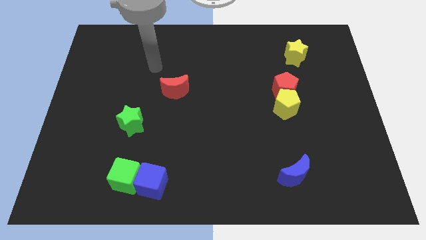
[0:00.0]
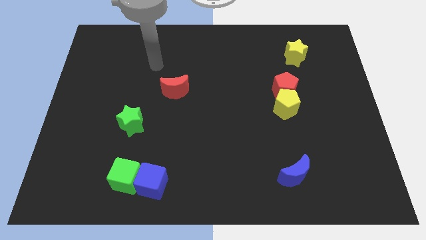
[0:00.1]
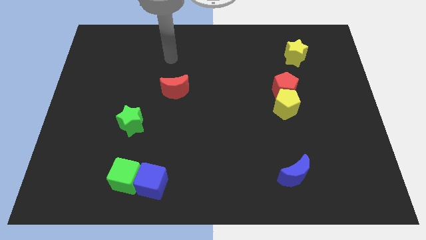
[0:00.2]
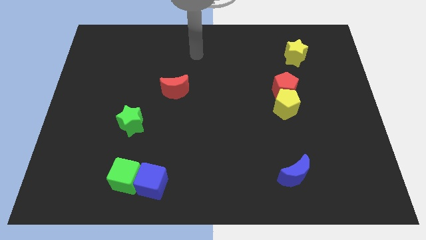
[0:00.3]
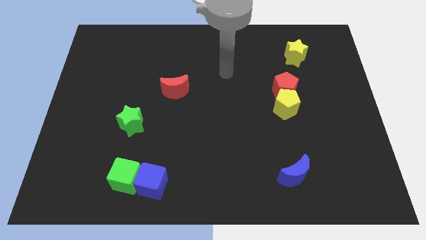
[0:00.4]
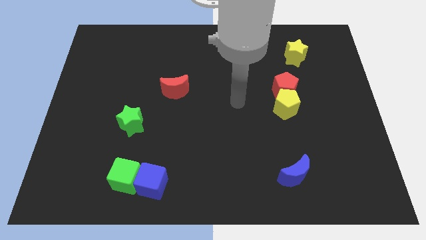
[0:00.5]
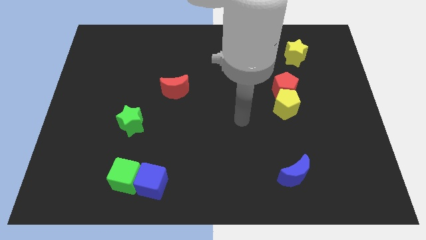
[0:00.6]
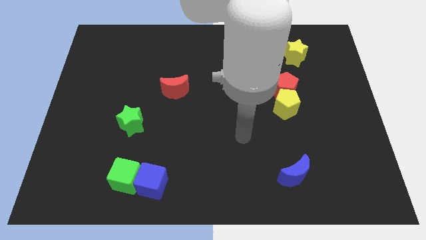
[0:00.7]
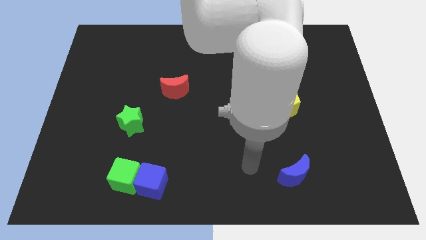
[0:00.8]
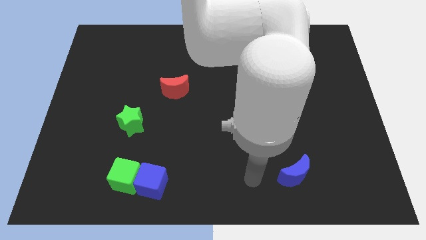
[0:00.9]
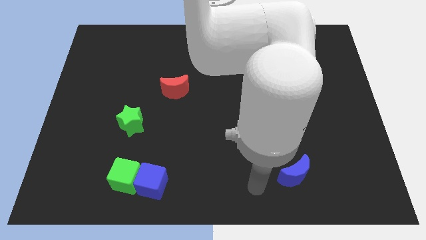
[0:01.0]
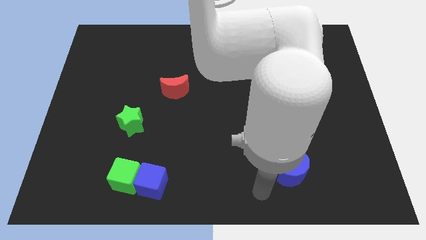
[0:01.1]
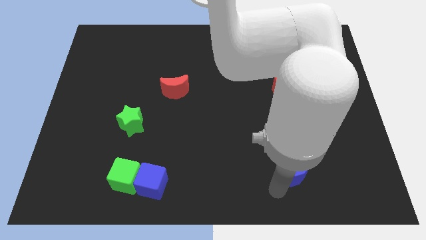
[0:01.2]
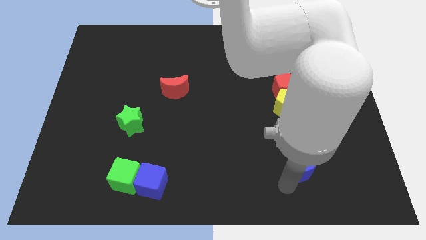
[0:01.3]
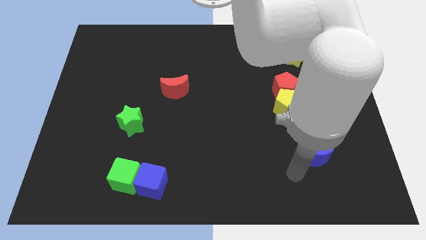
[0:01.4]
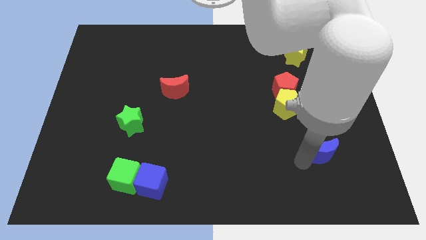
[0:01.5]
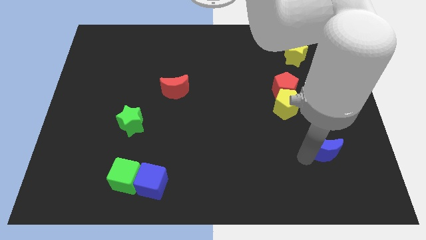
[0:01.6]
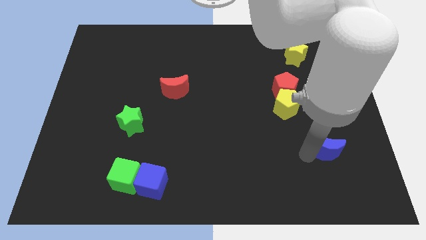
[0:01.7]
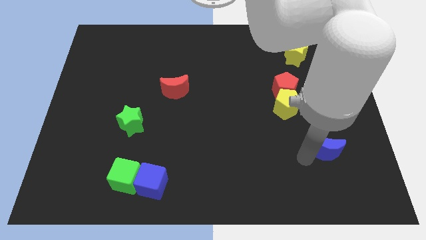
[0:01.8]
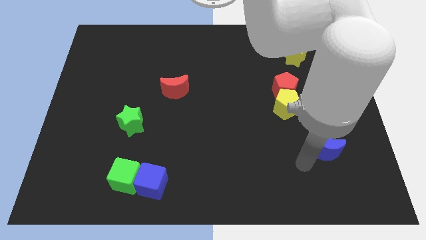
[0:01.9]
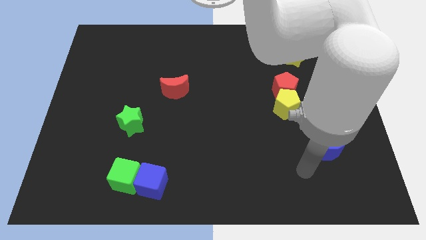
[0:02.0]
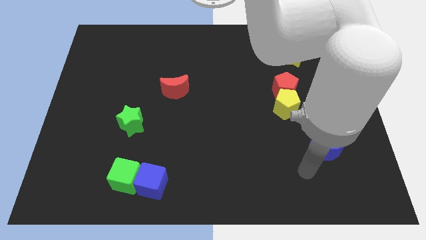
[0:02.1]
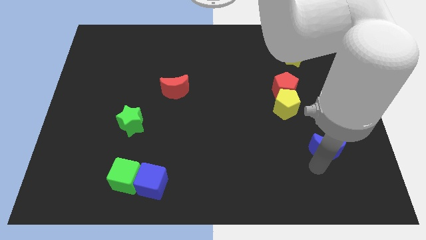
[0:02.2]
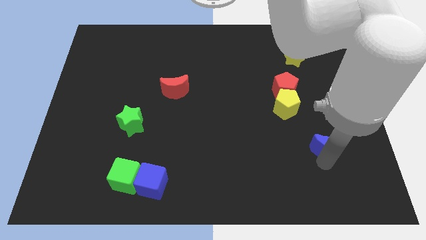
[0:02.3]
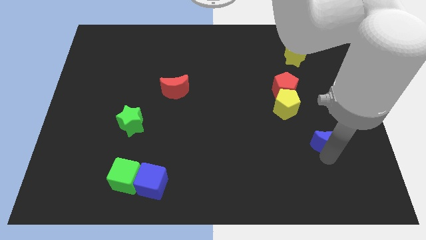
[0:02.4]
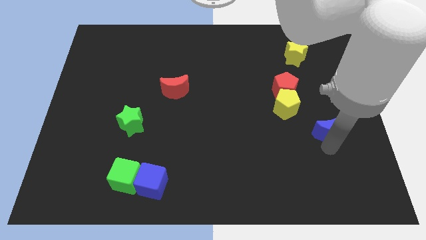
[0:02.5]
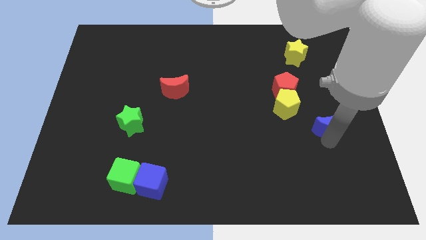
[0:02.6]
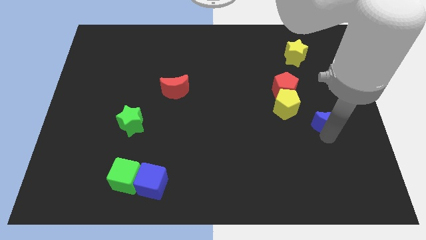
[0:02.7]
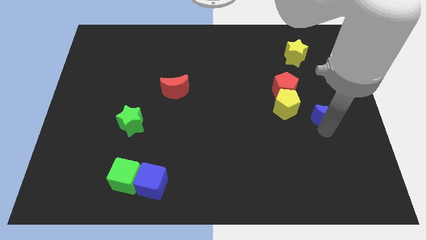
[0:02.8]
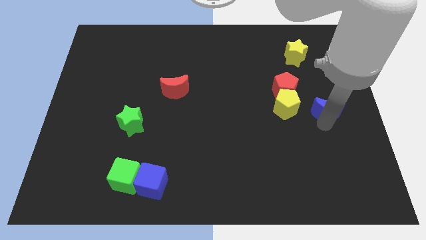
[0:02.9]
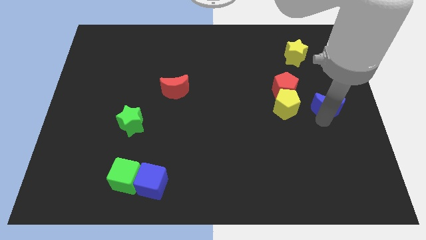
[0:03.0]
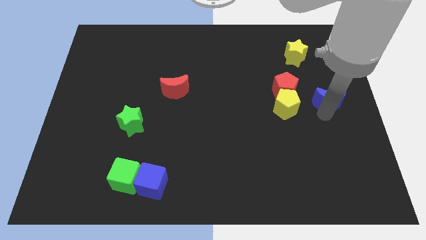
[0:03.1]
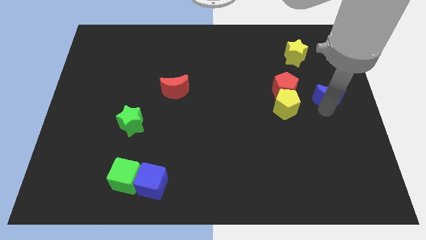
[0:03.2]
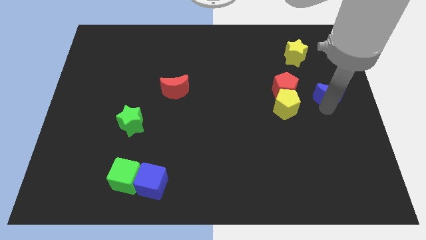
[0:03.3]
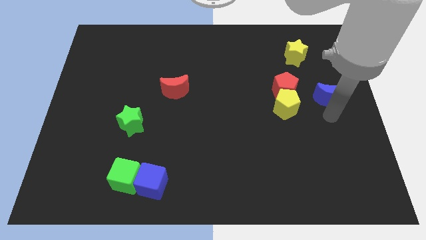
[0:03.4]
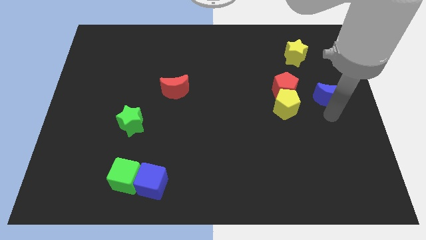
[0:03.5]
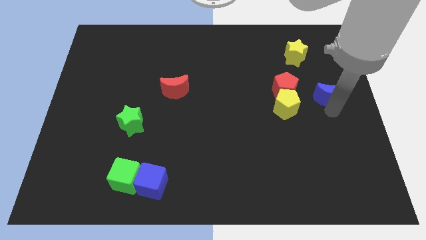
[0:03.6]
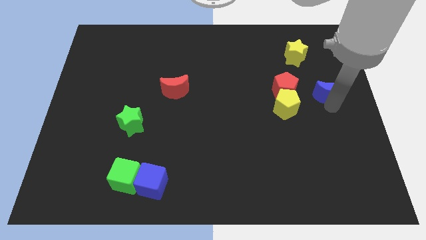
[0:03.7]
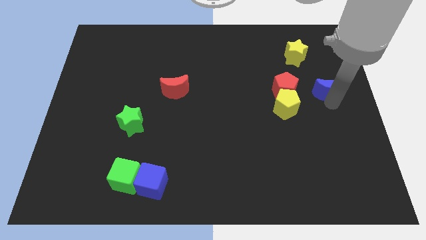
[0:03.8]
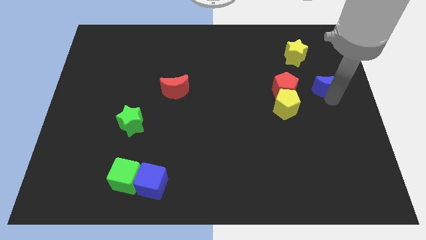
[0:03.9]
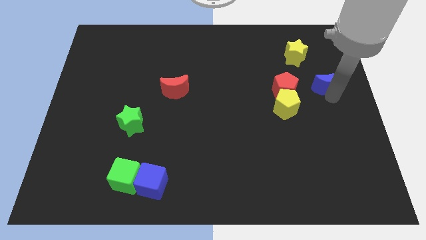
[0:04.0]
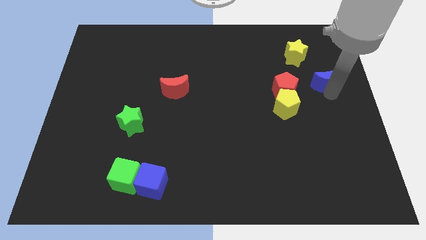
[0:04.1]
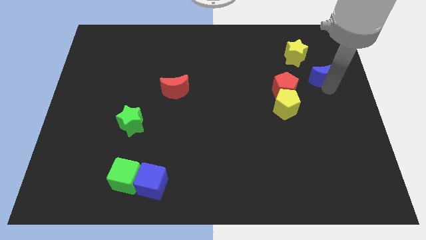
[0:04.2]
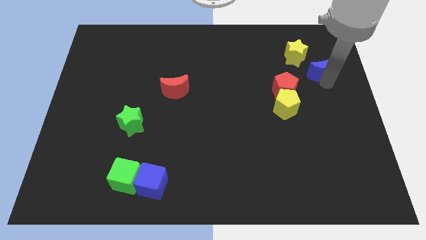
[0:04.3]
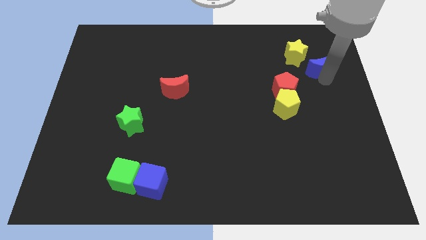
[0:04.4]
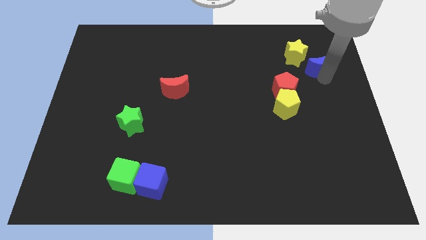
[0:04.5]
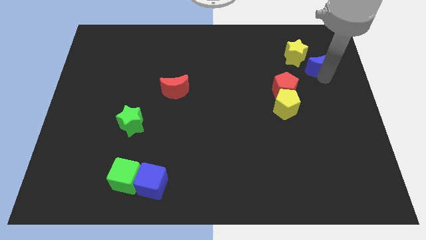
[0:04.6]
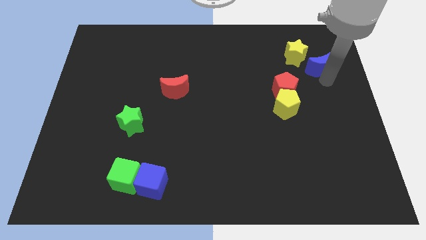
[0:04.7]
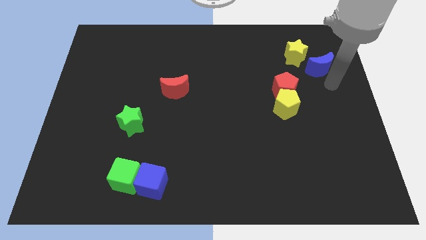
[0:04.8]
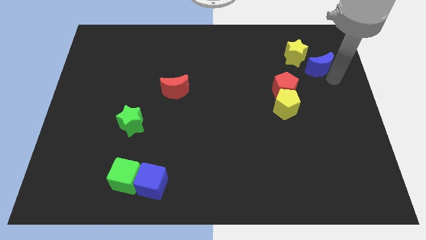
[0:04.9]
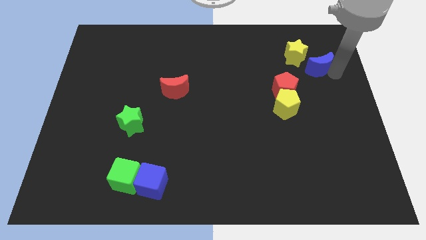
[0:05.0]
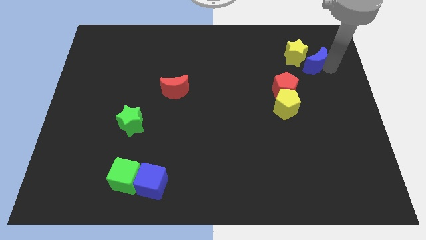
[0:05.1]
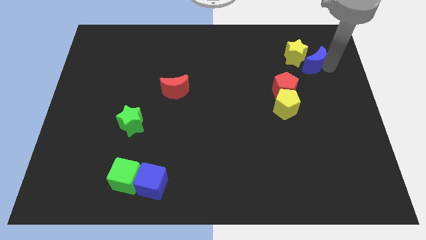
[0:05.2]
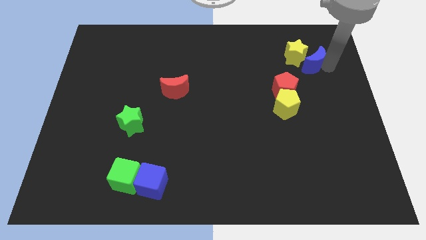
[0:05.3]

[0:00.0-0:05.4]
slide the blue moon next to the yellow star

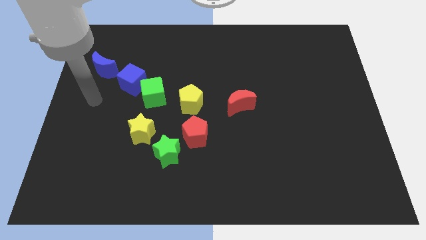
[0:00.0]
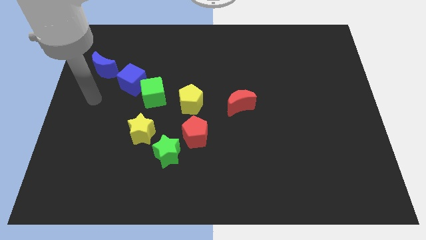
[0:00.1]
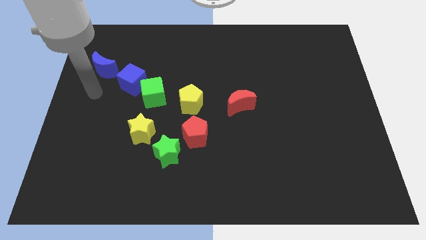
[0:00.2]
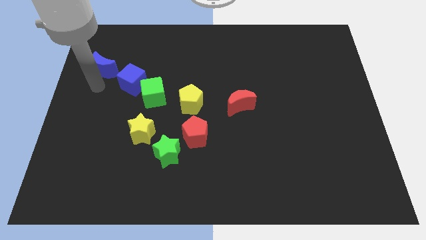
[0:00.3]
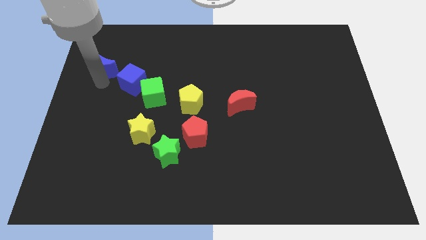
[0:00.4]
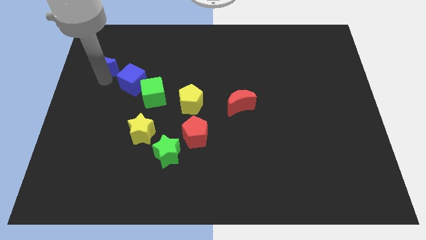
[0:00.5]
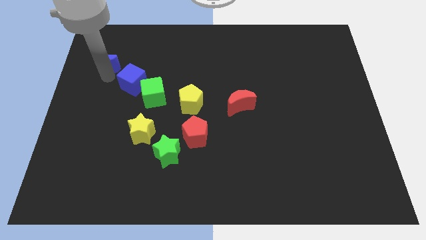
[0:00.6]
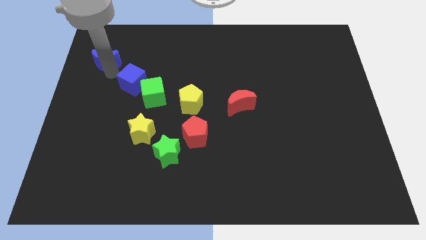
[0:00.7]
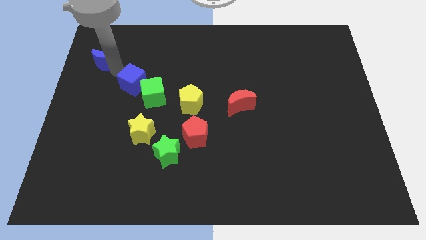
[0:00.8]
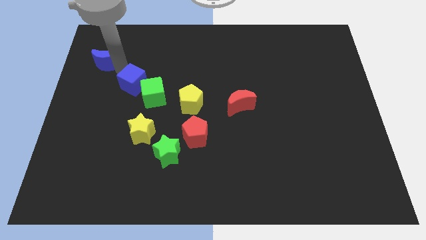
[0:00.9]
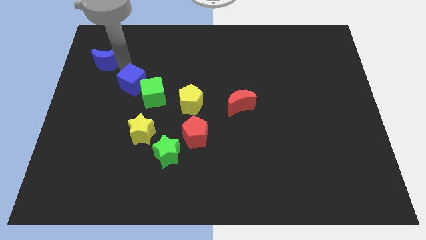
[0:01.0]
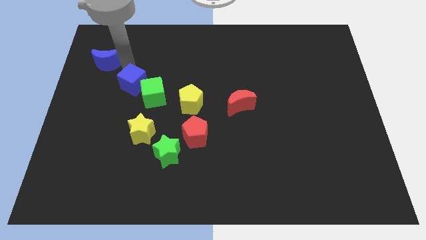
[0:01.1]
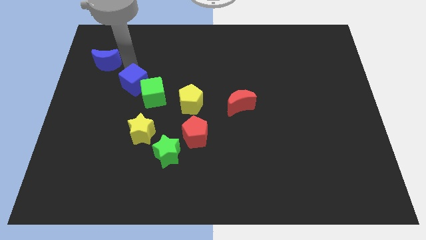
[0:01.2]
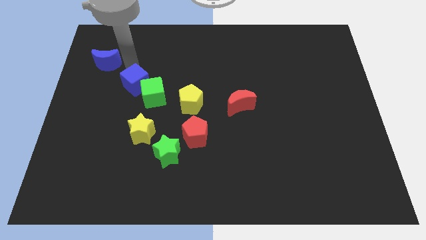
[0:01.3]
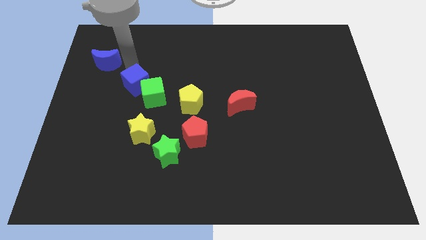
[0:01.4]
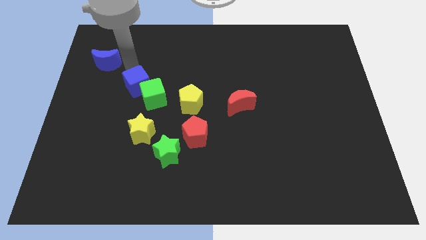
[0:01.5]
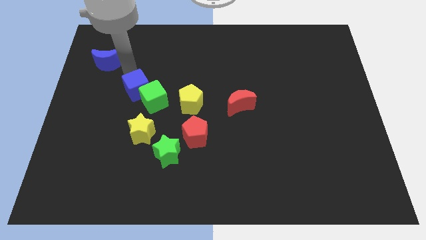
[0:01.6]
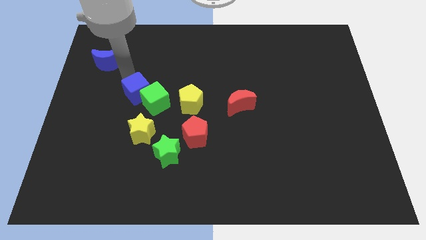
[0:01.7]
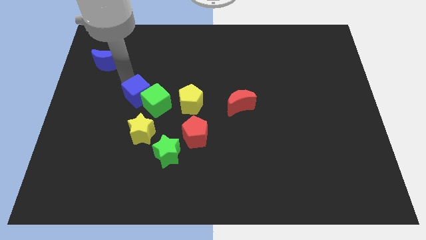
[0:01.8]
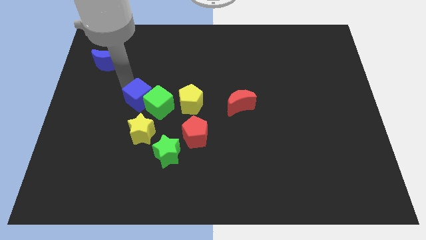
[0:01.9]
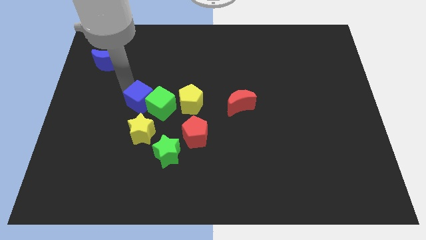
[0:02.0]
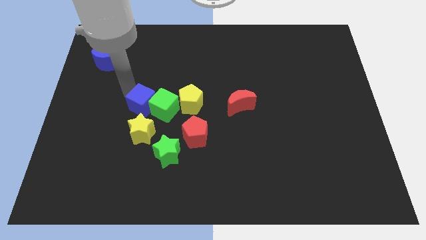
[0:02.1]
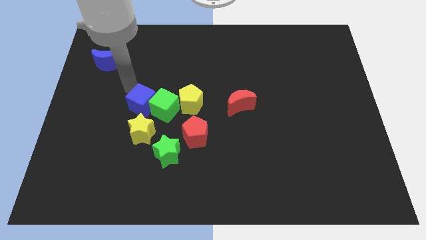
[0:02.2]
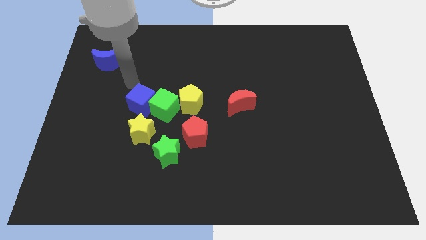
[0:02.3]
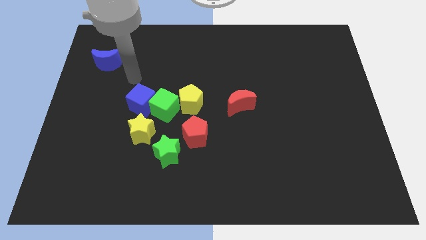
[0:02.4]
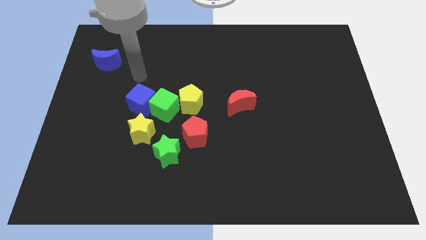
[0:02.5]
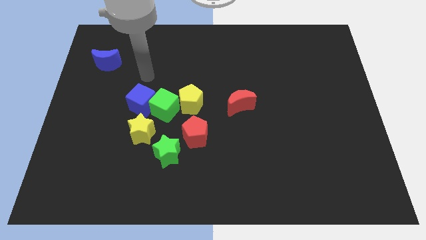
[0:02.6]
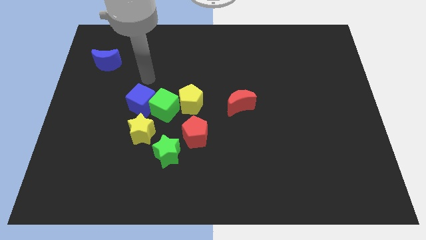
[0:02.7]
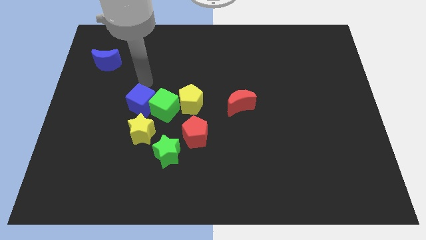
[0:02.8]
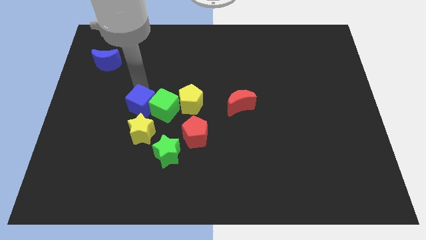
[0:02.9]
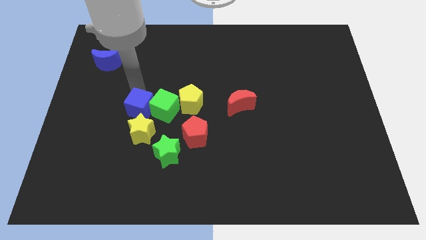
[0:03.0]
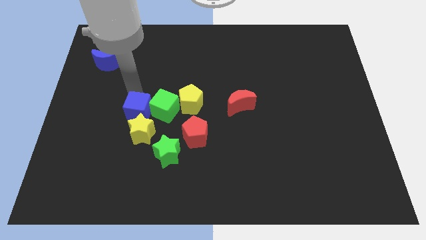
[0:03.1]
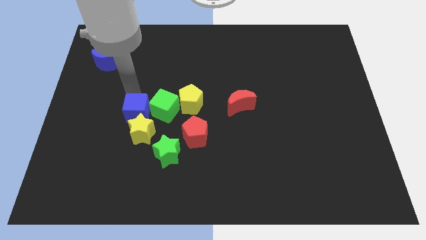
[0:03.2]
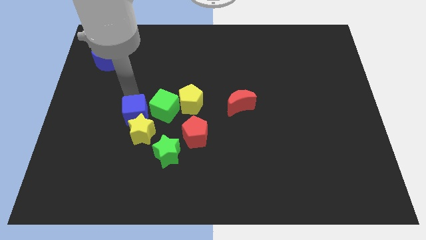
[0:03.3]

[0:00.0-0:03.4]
move the blue cube towards the yellow star
